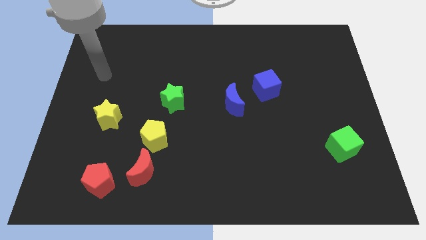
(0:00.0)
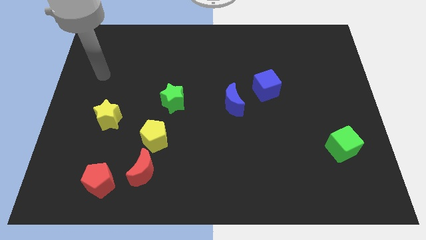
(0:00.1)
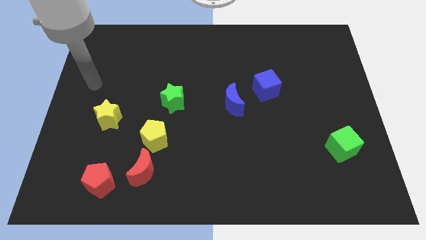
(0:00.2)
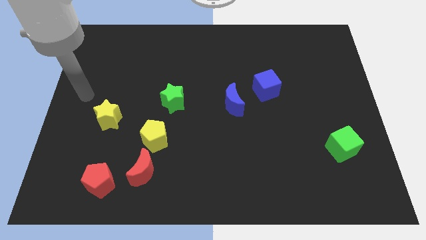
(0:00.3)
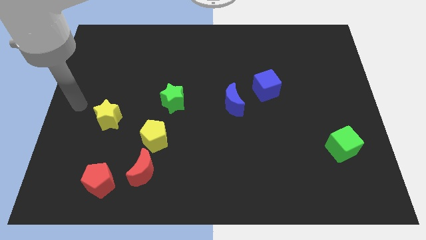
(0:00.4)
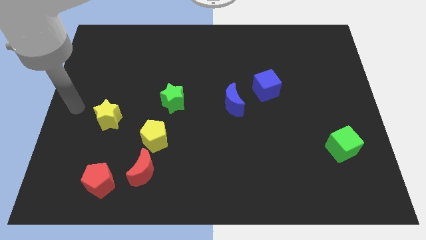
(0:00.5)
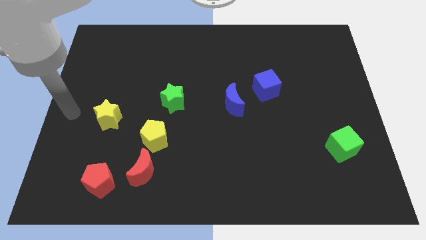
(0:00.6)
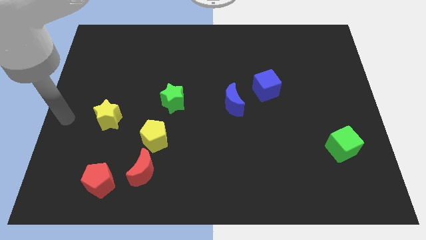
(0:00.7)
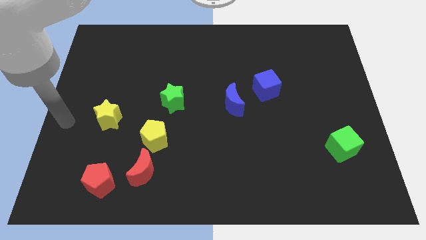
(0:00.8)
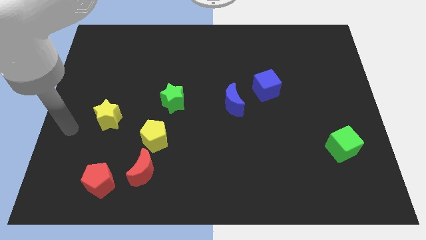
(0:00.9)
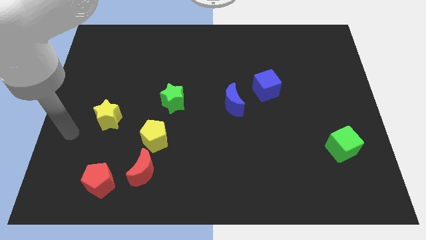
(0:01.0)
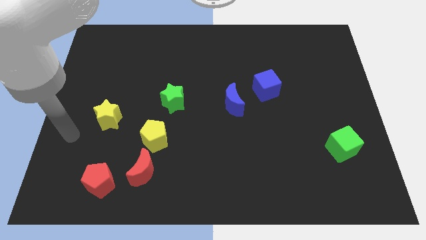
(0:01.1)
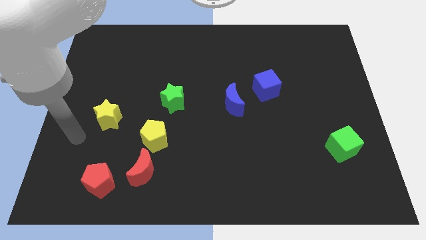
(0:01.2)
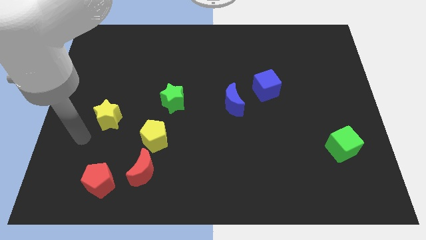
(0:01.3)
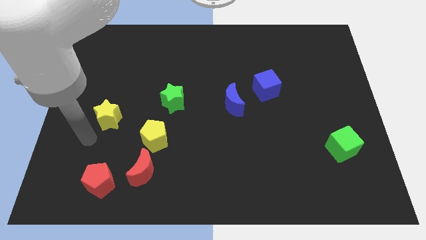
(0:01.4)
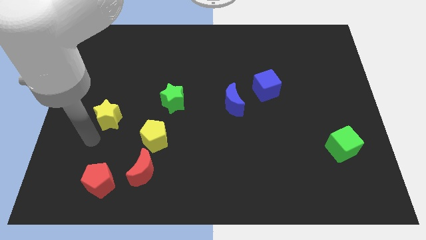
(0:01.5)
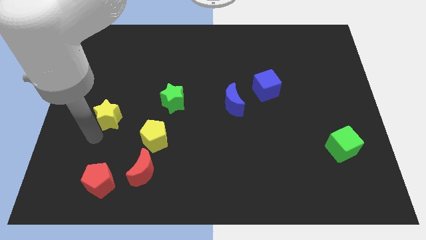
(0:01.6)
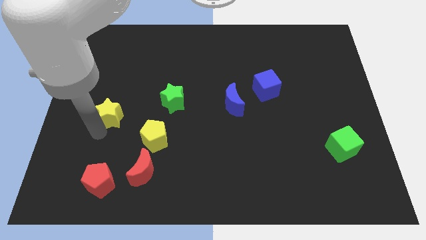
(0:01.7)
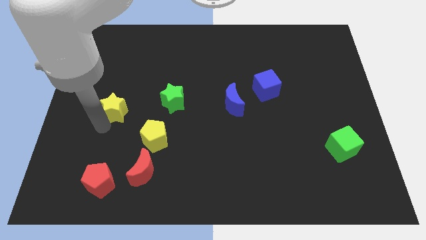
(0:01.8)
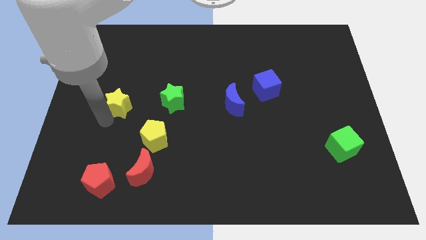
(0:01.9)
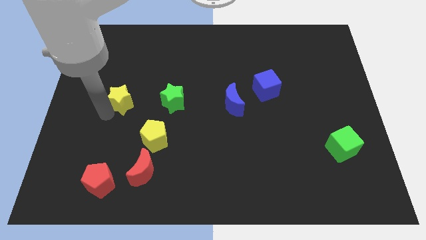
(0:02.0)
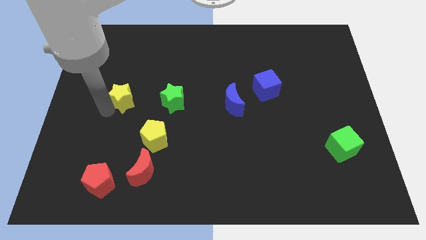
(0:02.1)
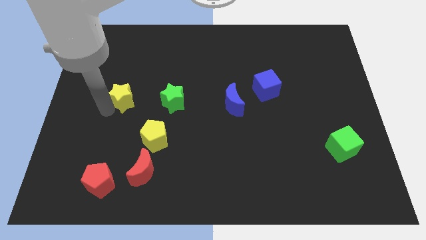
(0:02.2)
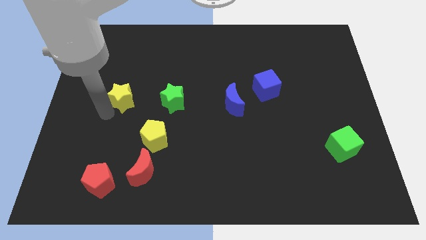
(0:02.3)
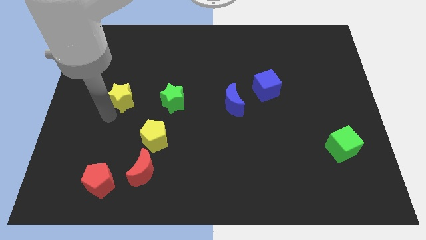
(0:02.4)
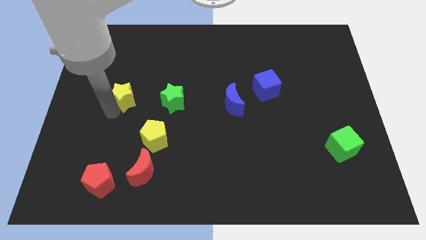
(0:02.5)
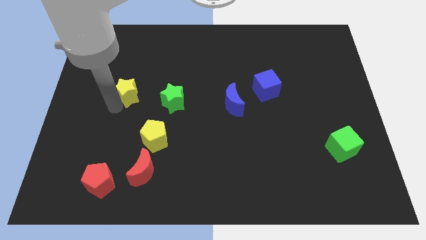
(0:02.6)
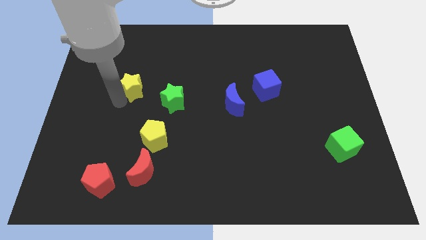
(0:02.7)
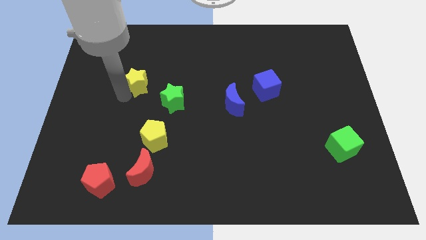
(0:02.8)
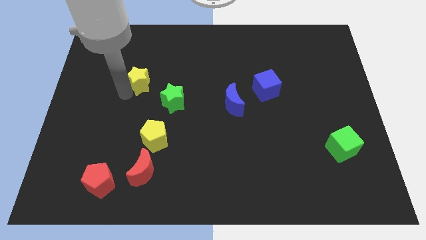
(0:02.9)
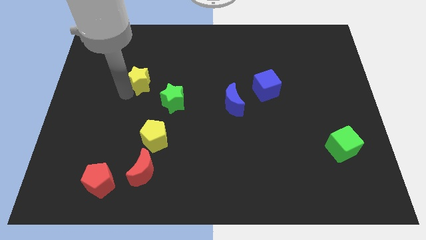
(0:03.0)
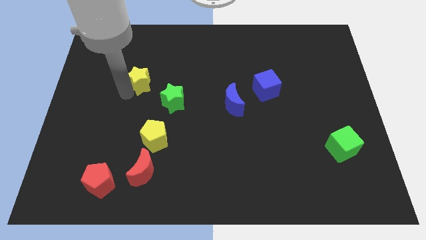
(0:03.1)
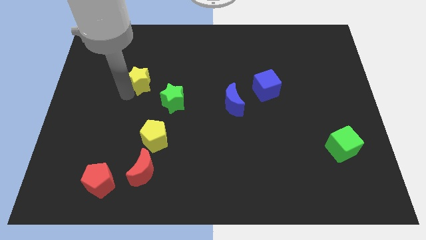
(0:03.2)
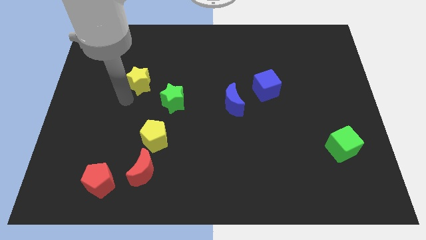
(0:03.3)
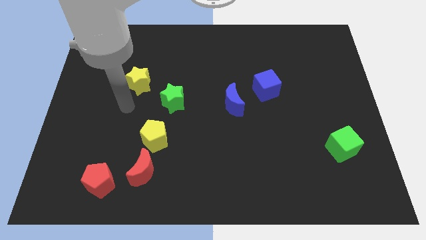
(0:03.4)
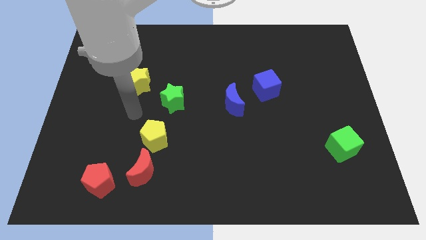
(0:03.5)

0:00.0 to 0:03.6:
push the yellow star above the green star

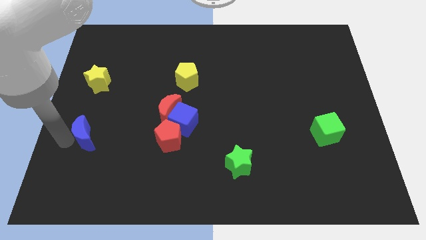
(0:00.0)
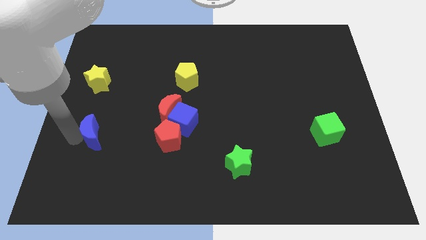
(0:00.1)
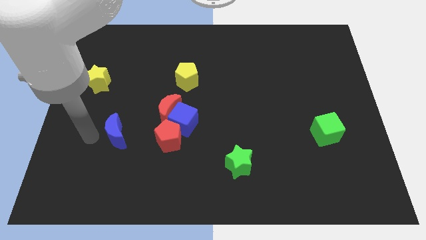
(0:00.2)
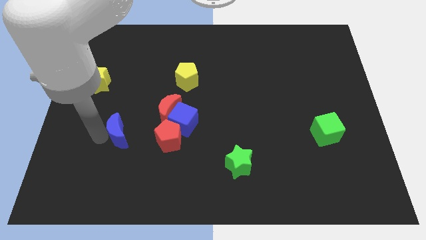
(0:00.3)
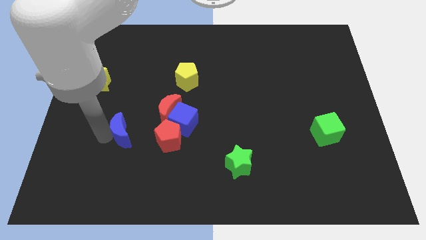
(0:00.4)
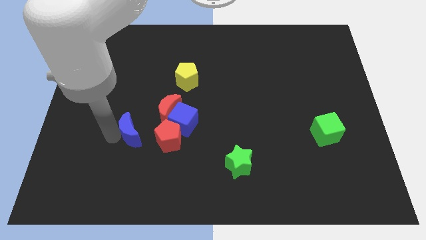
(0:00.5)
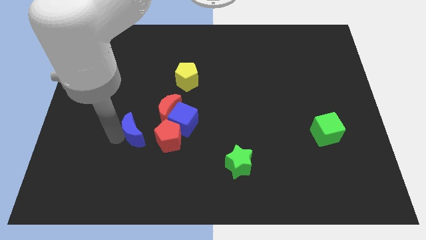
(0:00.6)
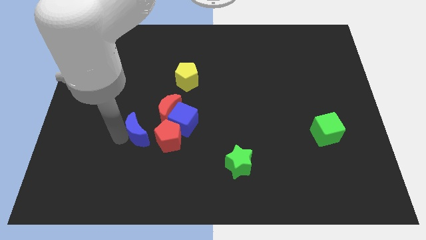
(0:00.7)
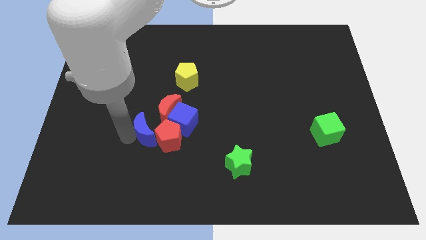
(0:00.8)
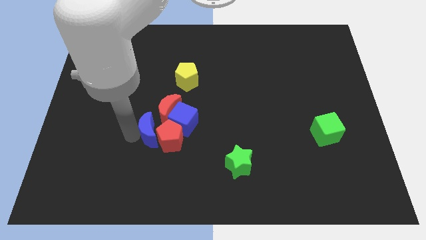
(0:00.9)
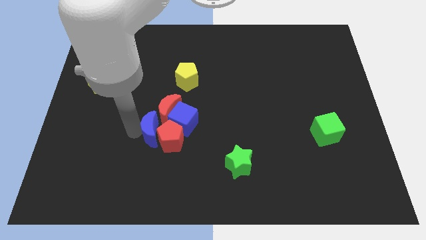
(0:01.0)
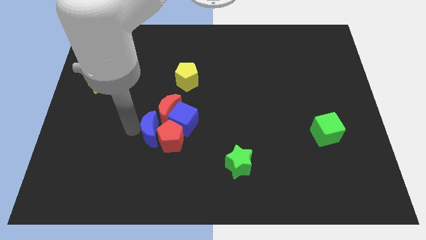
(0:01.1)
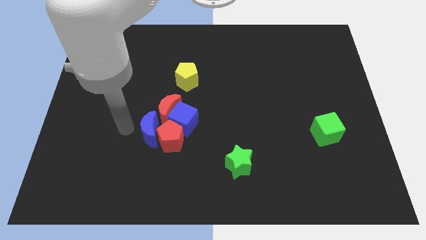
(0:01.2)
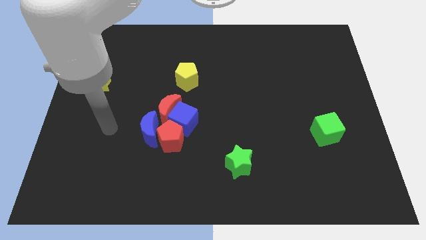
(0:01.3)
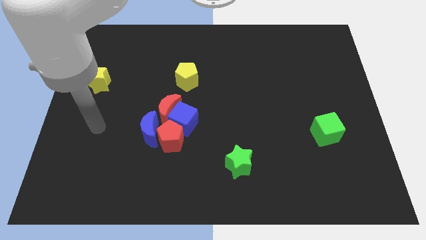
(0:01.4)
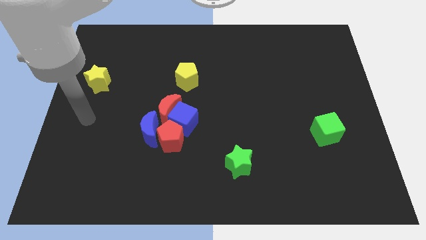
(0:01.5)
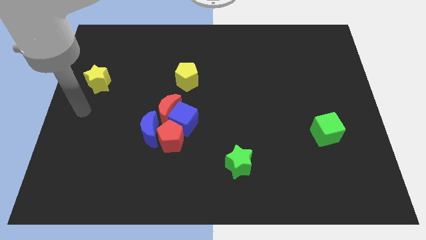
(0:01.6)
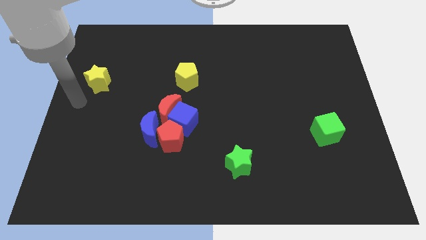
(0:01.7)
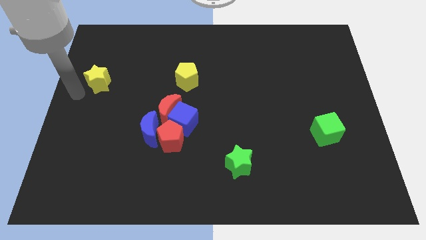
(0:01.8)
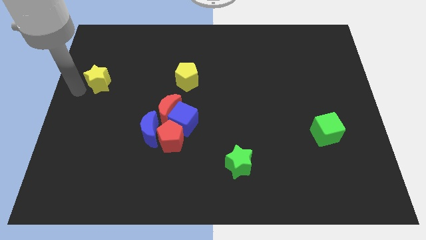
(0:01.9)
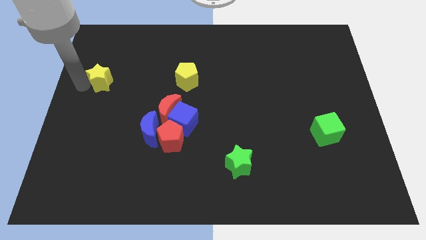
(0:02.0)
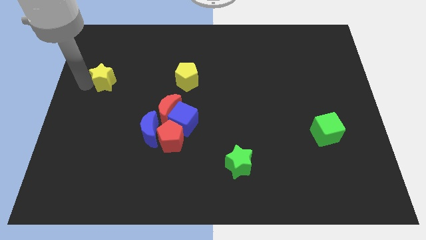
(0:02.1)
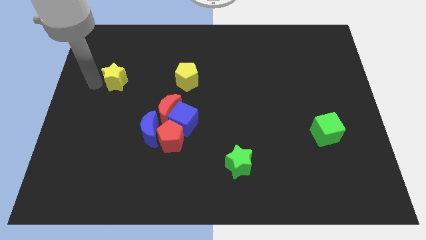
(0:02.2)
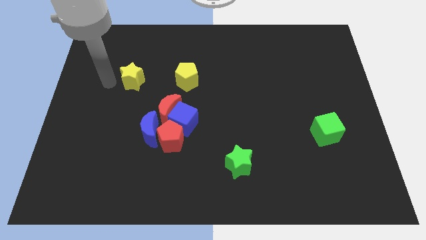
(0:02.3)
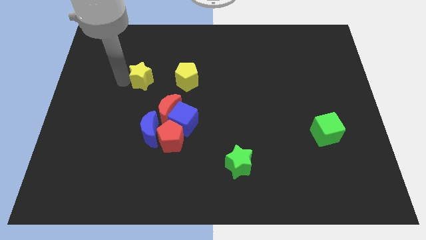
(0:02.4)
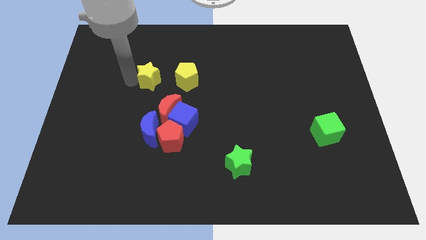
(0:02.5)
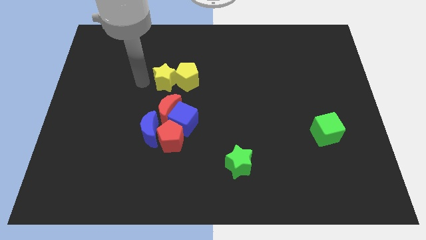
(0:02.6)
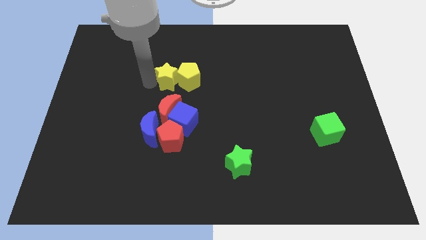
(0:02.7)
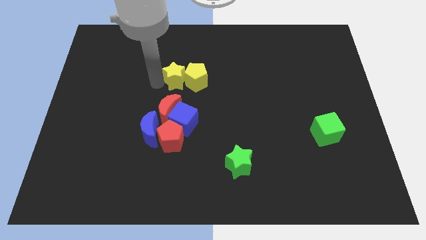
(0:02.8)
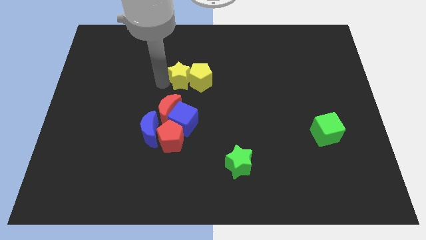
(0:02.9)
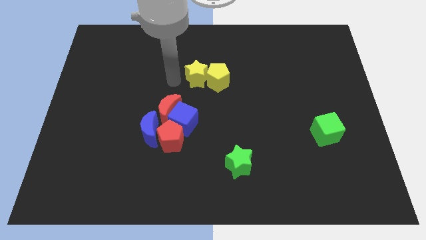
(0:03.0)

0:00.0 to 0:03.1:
push the yellow star into the yellow pentagon

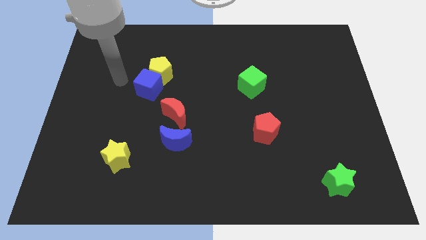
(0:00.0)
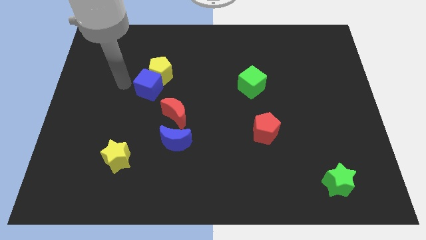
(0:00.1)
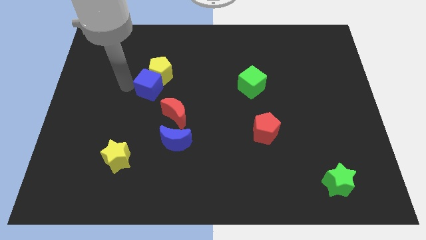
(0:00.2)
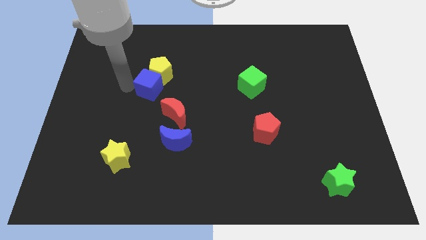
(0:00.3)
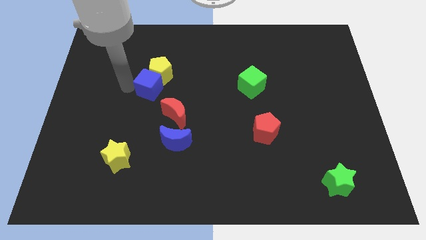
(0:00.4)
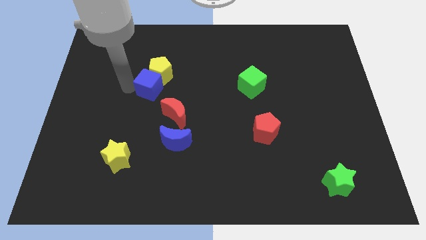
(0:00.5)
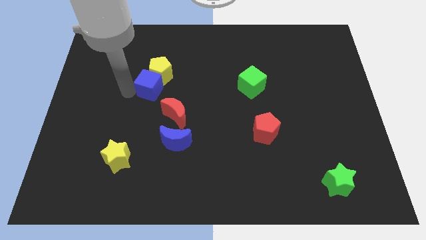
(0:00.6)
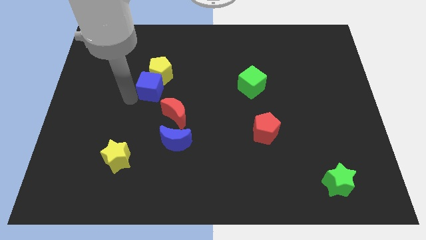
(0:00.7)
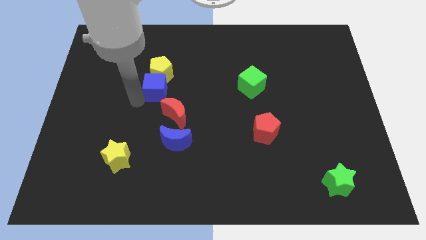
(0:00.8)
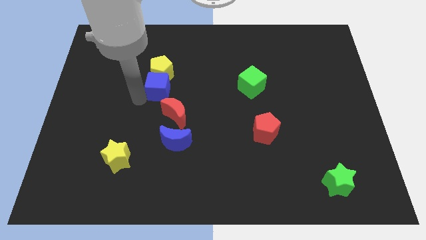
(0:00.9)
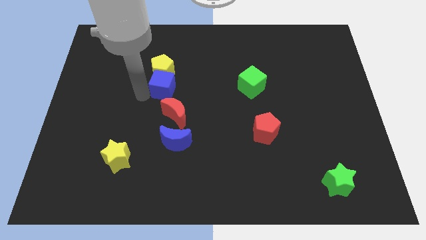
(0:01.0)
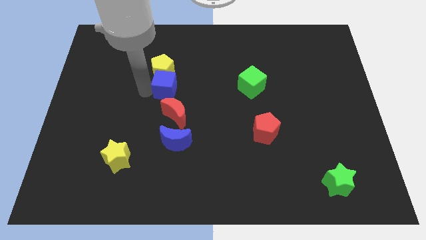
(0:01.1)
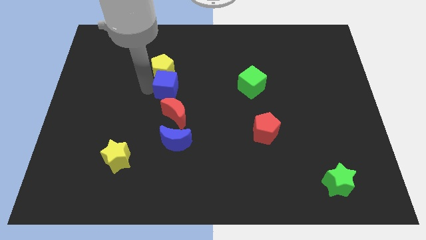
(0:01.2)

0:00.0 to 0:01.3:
adjust the blue cube to the center of the yellow pentagon and red crescent

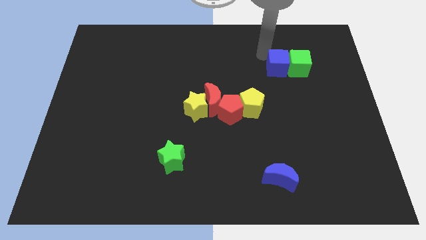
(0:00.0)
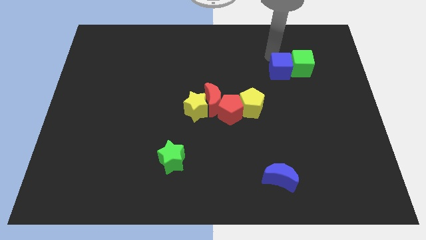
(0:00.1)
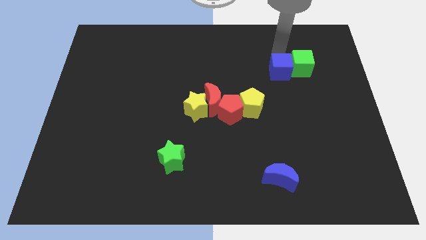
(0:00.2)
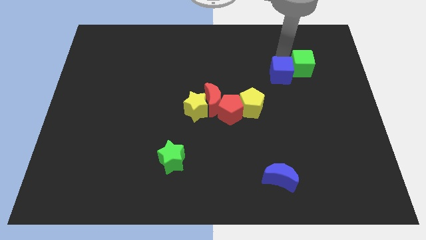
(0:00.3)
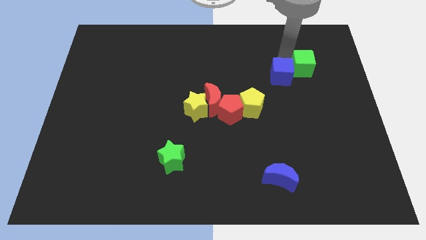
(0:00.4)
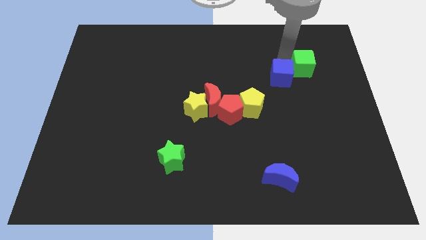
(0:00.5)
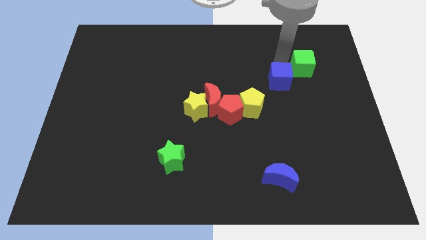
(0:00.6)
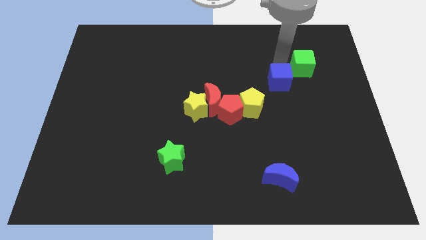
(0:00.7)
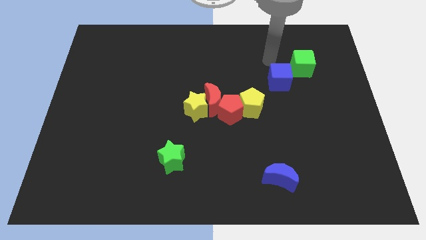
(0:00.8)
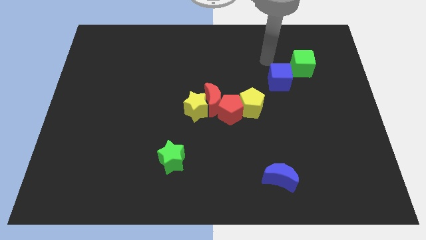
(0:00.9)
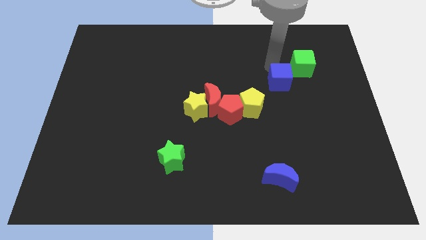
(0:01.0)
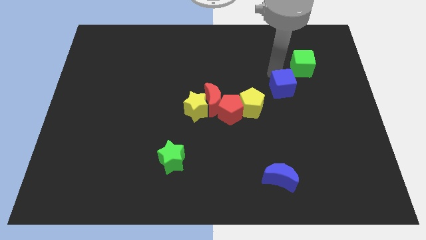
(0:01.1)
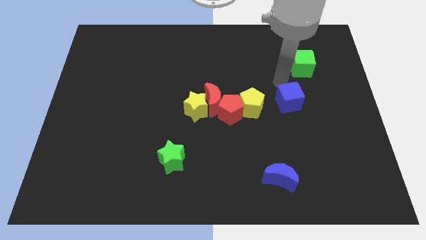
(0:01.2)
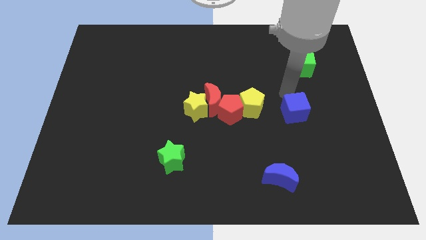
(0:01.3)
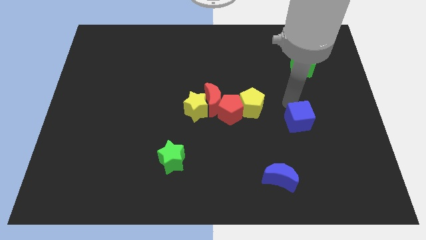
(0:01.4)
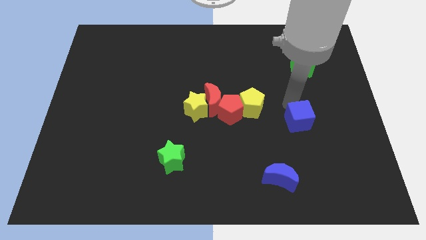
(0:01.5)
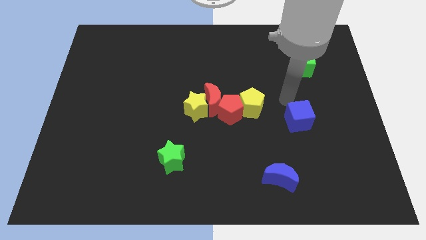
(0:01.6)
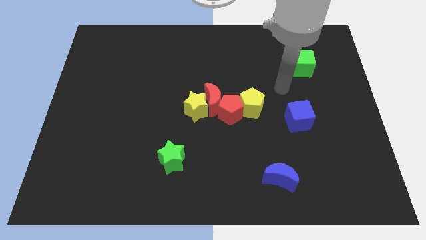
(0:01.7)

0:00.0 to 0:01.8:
move the blue cube right to the yellow pentagon
